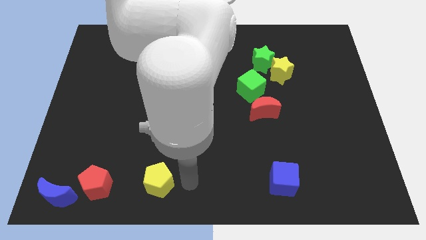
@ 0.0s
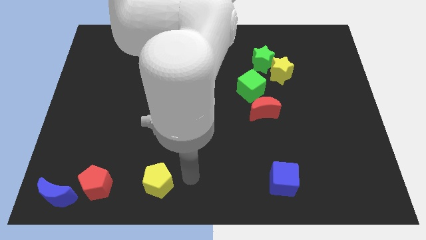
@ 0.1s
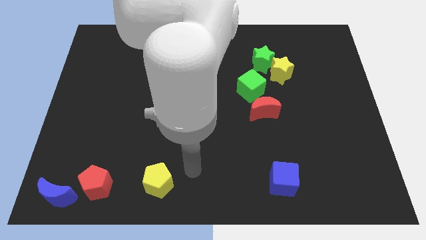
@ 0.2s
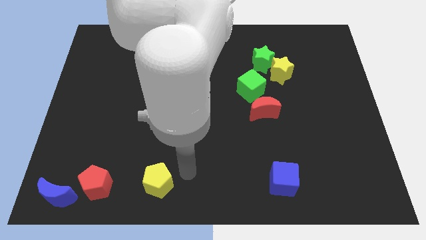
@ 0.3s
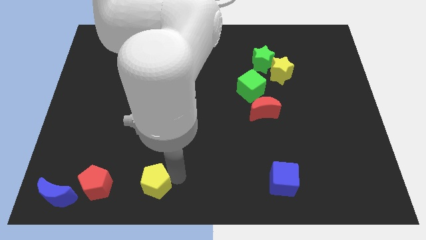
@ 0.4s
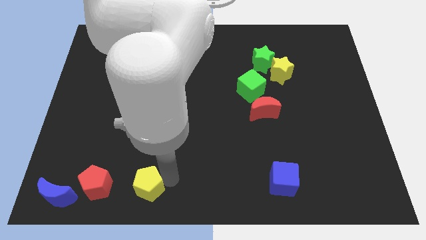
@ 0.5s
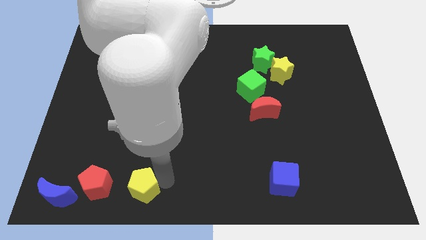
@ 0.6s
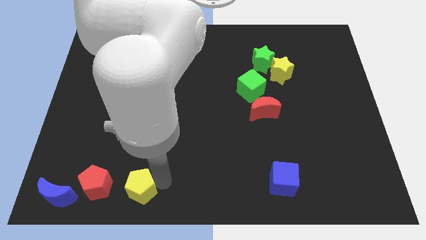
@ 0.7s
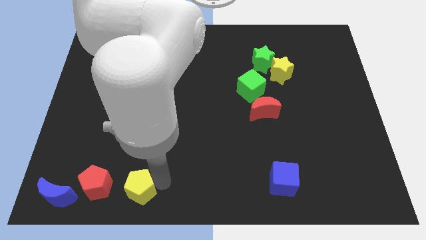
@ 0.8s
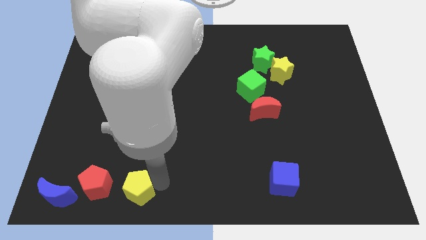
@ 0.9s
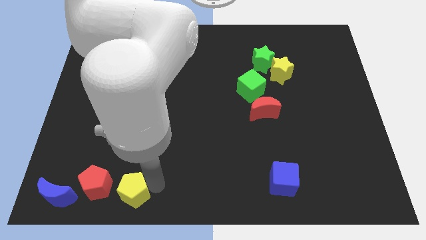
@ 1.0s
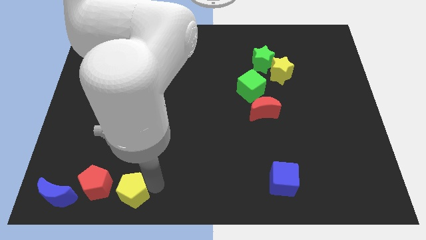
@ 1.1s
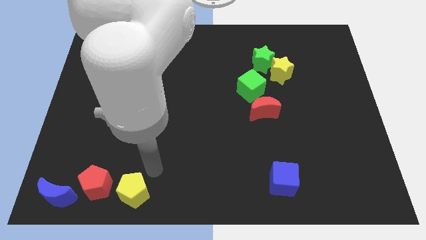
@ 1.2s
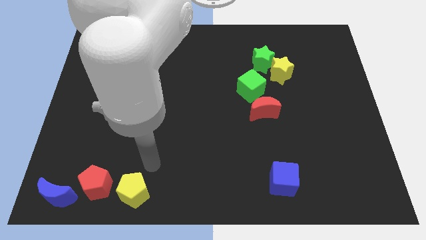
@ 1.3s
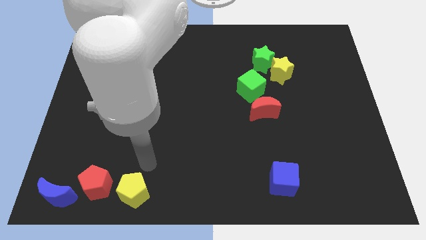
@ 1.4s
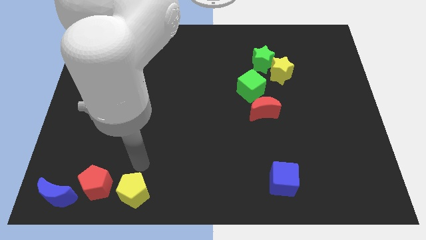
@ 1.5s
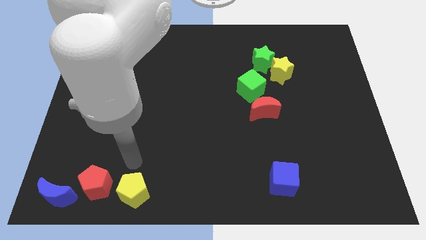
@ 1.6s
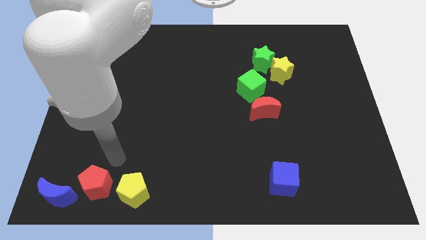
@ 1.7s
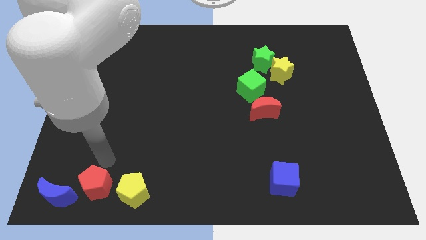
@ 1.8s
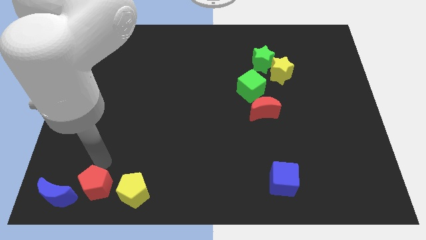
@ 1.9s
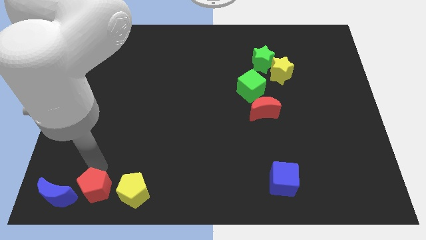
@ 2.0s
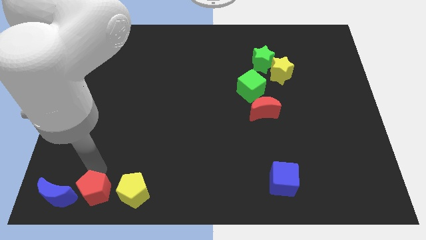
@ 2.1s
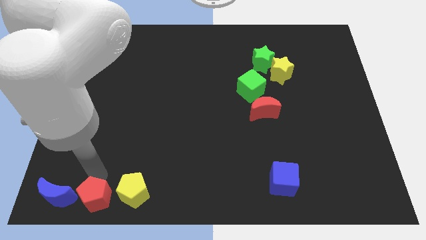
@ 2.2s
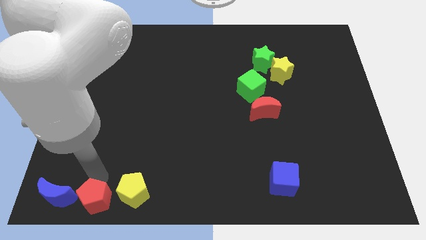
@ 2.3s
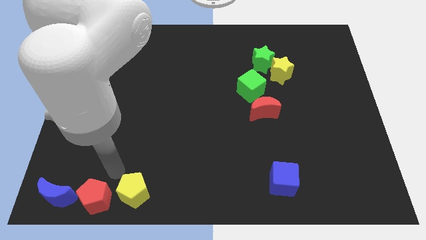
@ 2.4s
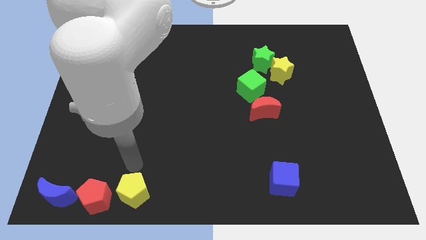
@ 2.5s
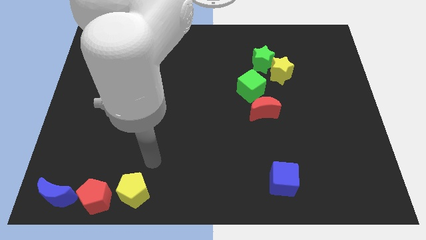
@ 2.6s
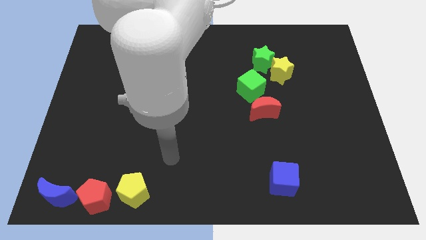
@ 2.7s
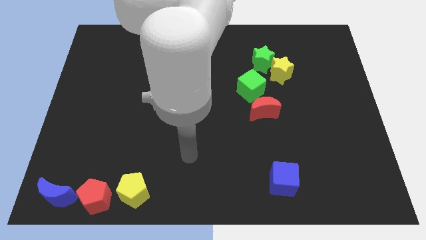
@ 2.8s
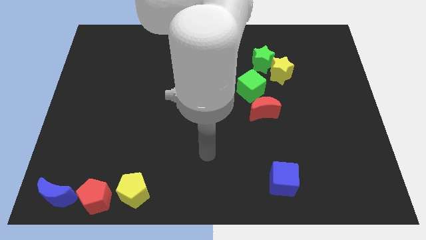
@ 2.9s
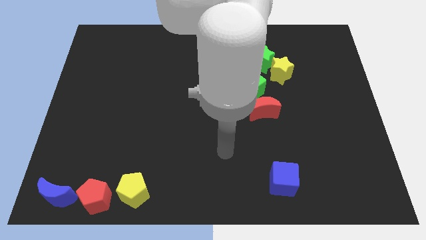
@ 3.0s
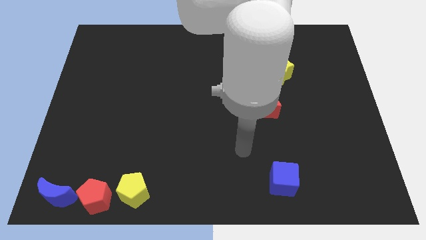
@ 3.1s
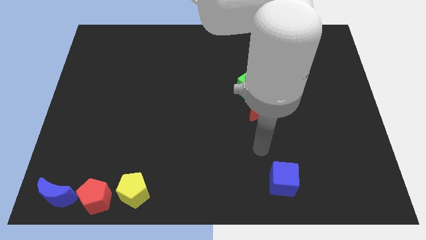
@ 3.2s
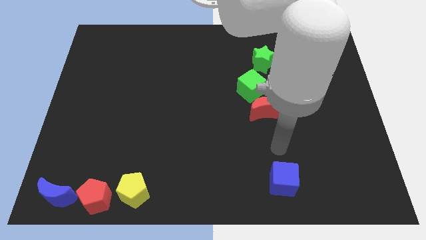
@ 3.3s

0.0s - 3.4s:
place yellow pentagon right of red pentagon

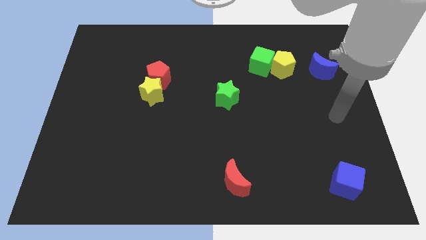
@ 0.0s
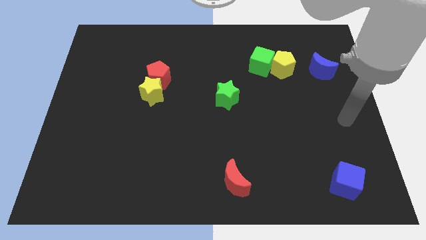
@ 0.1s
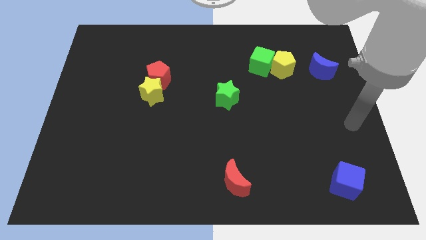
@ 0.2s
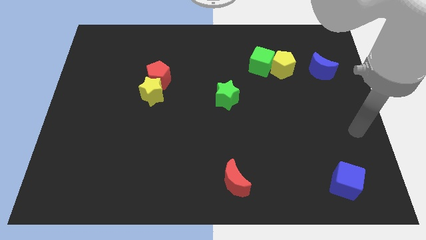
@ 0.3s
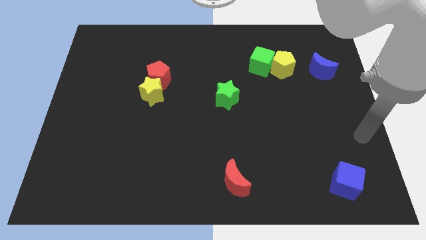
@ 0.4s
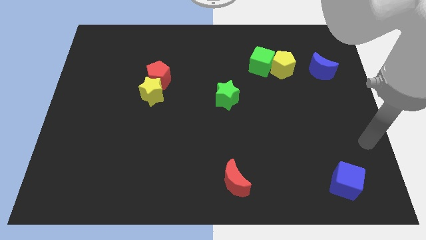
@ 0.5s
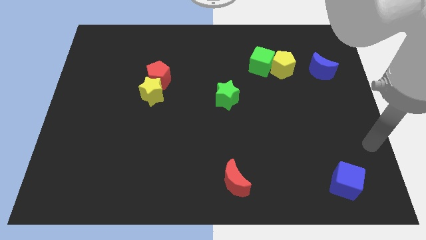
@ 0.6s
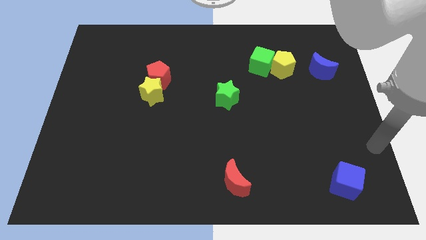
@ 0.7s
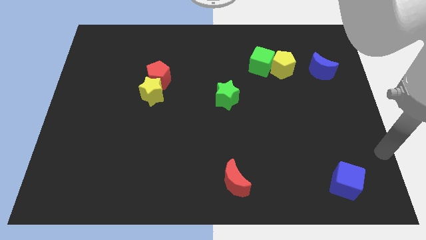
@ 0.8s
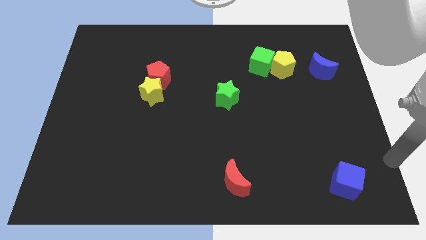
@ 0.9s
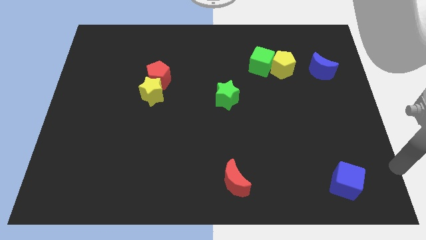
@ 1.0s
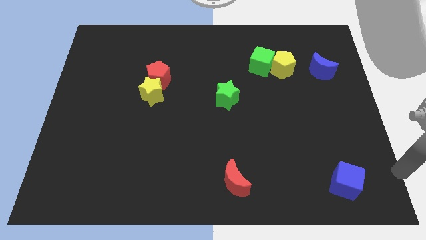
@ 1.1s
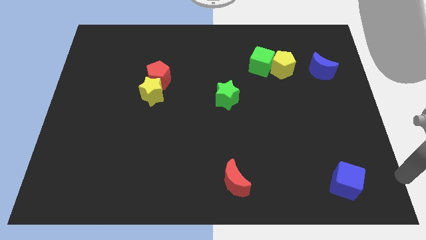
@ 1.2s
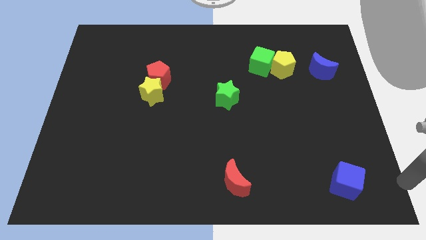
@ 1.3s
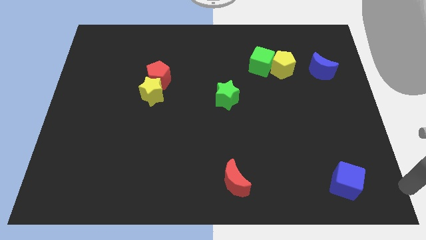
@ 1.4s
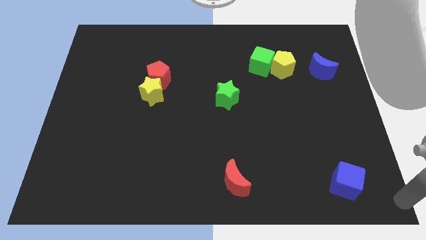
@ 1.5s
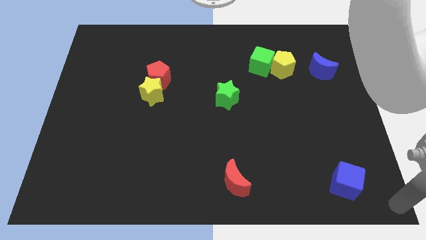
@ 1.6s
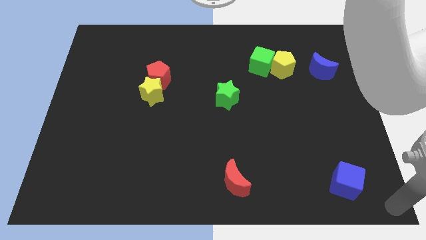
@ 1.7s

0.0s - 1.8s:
move your arm to the bottom right corner of the board

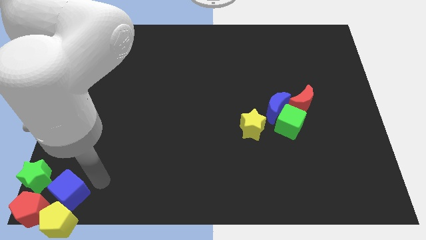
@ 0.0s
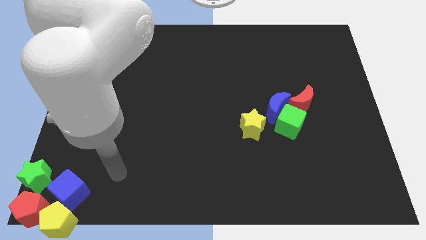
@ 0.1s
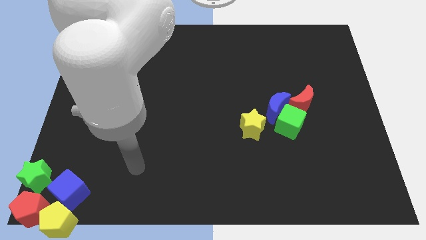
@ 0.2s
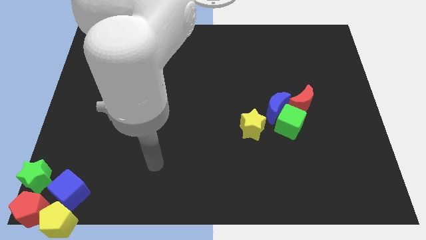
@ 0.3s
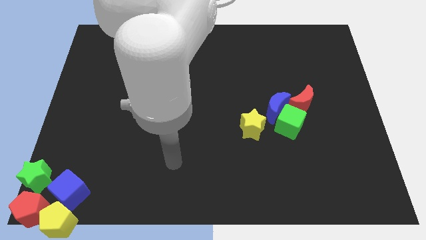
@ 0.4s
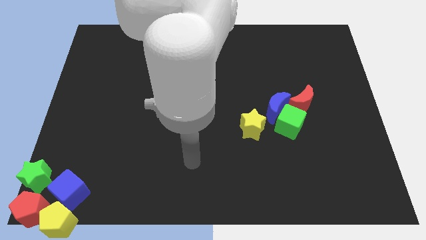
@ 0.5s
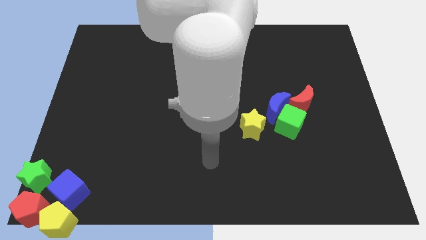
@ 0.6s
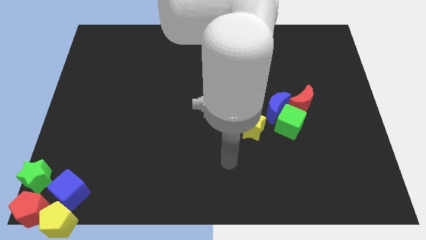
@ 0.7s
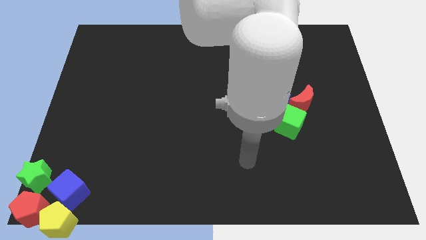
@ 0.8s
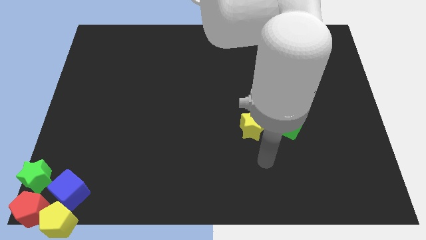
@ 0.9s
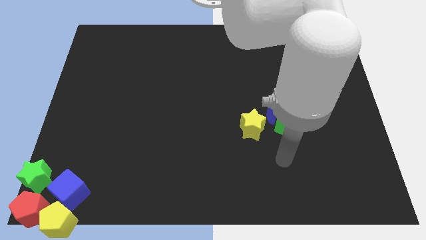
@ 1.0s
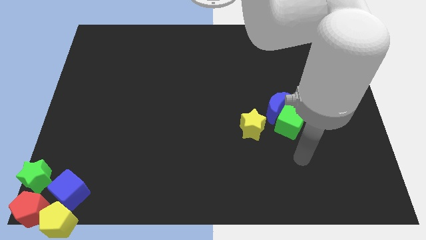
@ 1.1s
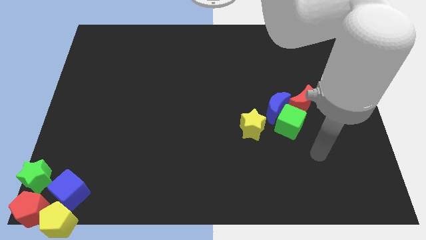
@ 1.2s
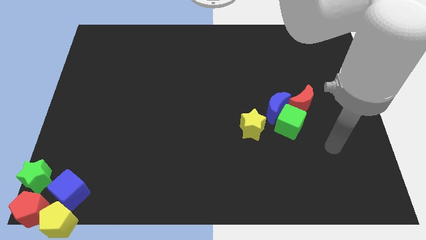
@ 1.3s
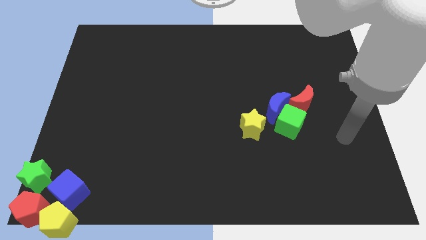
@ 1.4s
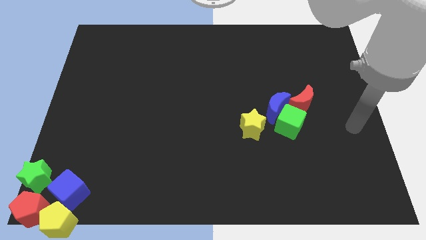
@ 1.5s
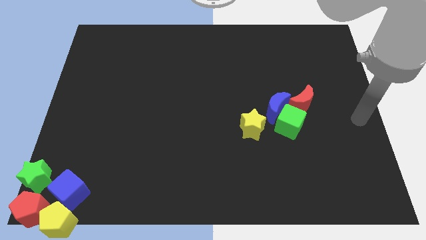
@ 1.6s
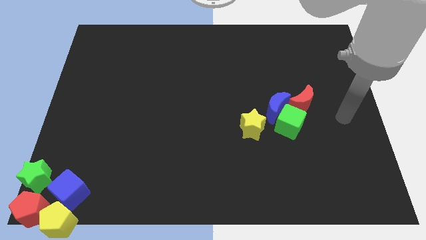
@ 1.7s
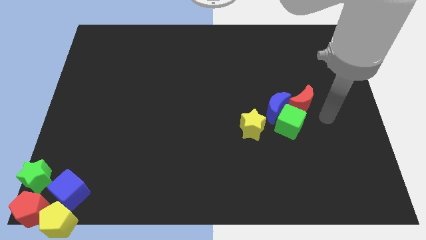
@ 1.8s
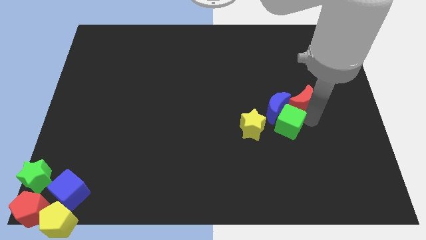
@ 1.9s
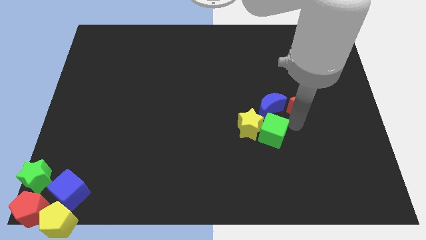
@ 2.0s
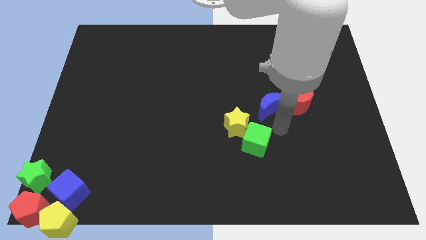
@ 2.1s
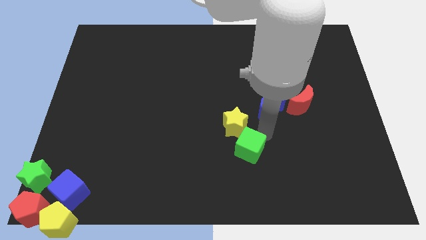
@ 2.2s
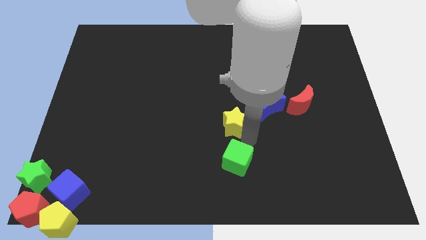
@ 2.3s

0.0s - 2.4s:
slightly push the green cube

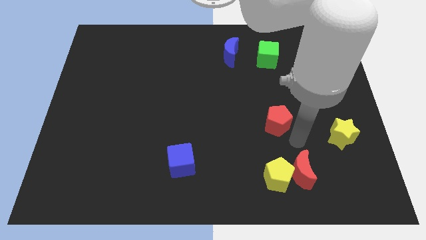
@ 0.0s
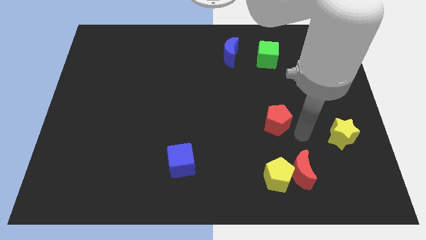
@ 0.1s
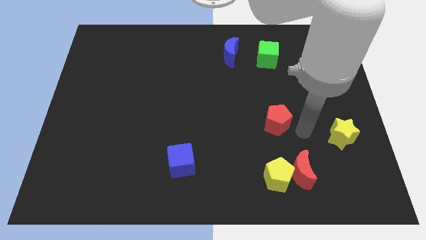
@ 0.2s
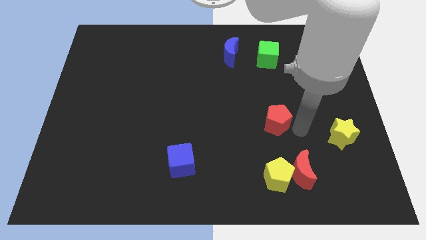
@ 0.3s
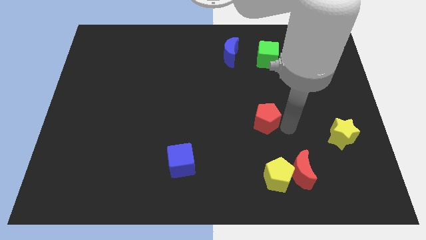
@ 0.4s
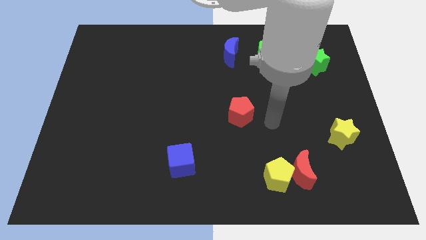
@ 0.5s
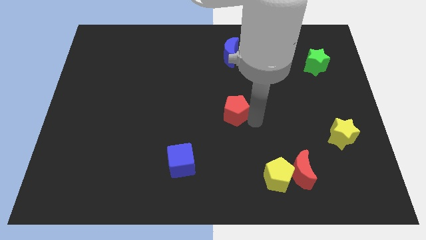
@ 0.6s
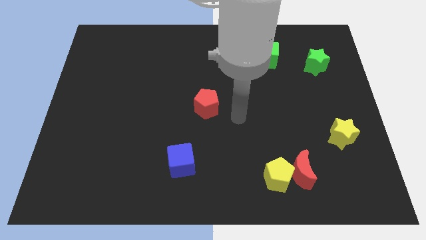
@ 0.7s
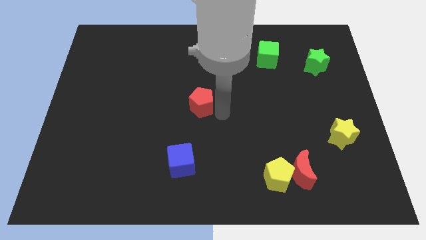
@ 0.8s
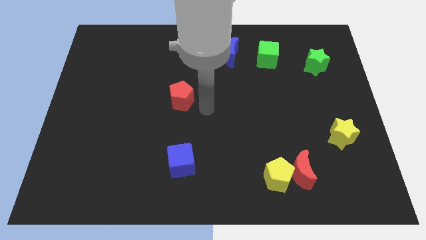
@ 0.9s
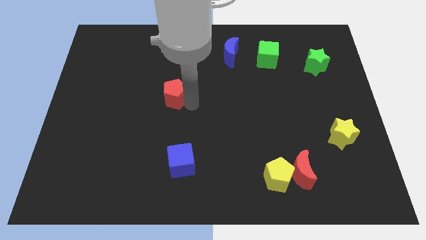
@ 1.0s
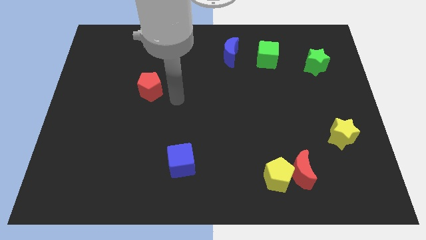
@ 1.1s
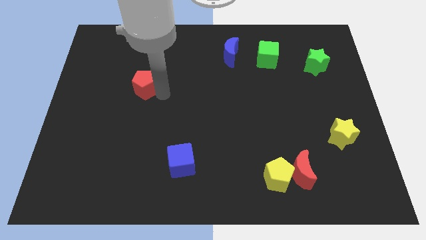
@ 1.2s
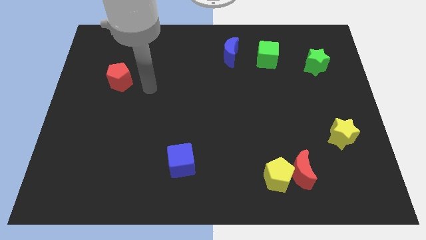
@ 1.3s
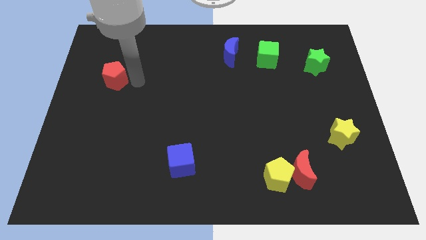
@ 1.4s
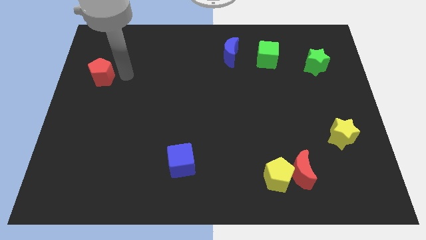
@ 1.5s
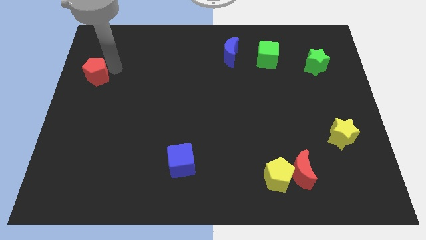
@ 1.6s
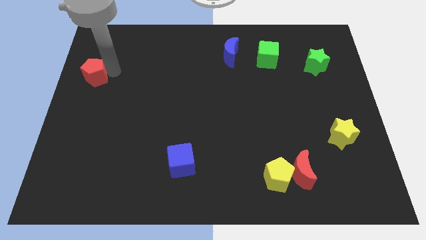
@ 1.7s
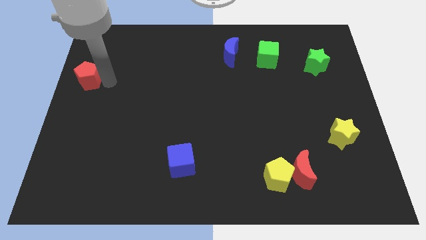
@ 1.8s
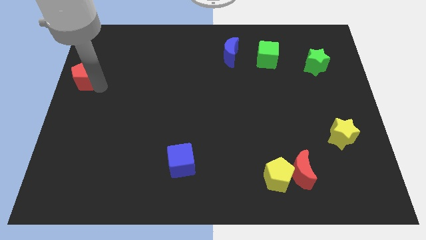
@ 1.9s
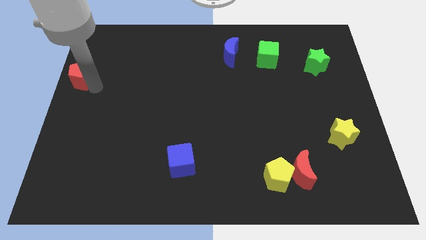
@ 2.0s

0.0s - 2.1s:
push the red pentagon to the left side of the board
